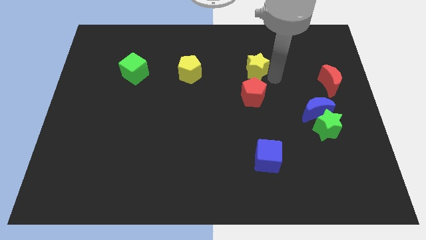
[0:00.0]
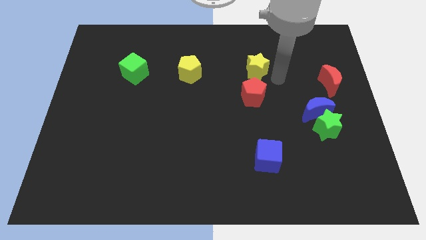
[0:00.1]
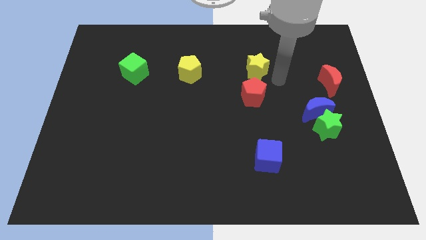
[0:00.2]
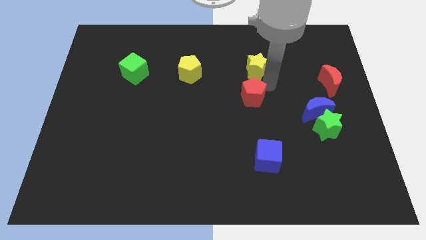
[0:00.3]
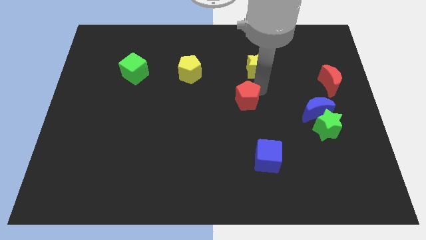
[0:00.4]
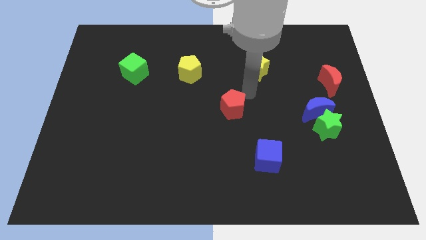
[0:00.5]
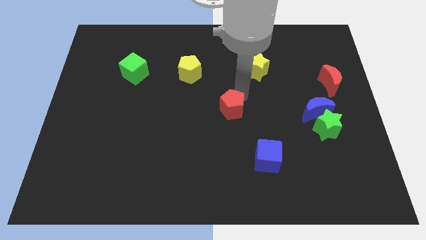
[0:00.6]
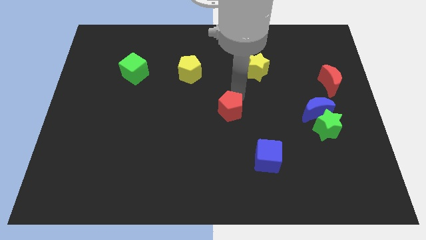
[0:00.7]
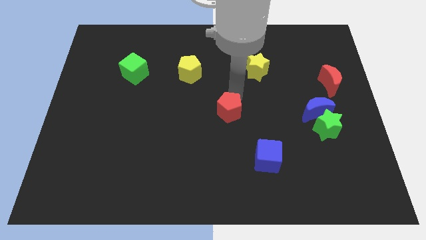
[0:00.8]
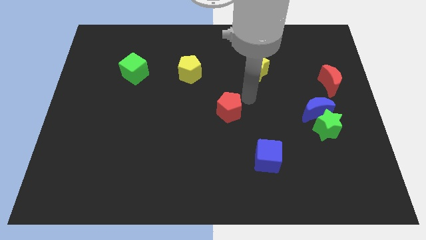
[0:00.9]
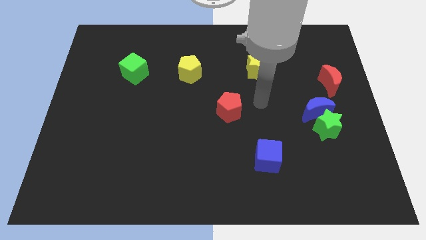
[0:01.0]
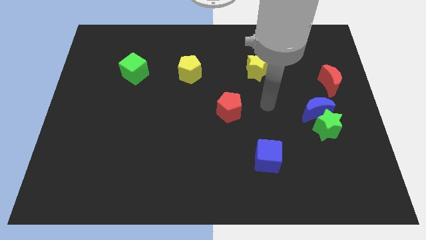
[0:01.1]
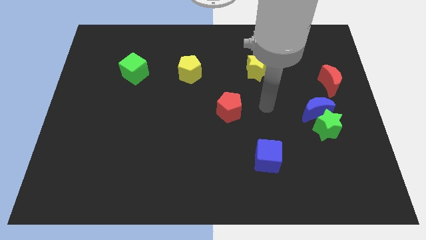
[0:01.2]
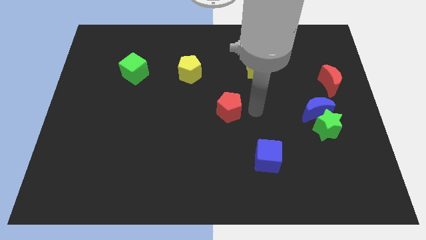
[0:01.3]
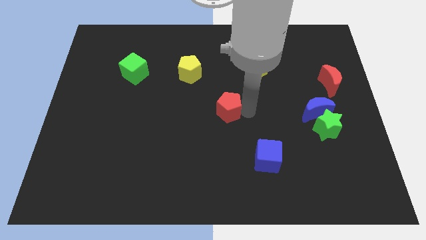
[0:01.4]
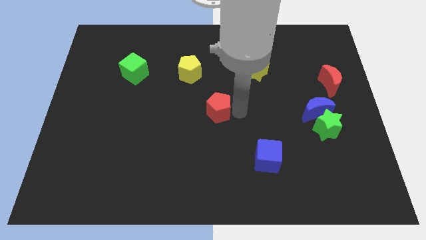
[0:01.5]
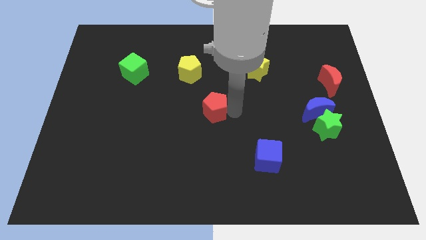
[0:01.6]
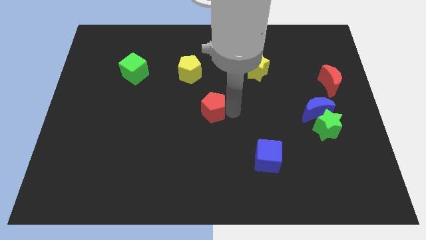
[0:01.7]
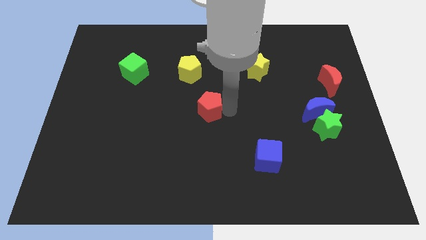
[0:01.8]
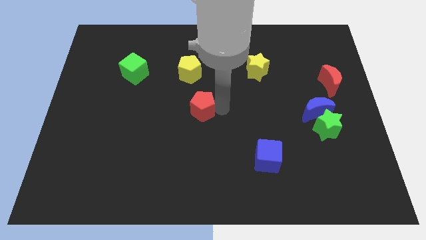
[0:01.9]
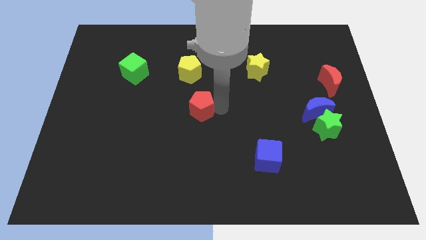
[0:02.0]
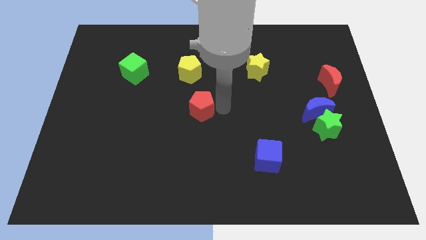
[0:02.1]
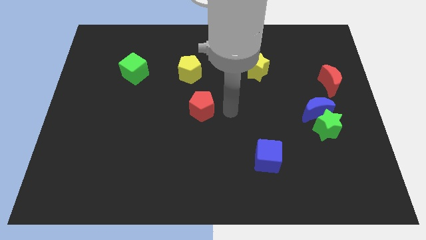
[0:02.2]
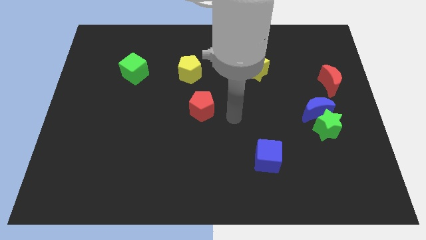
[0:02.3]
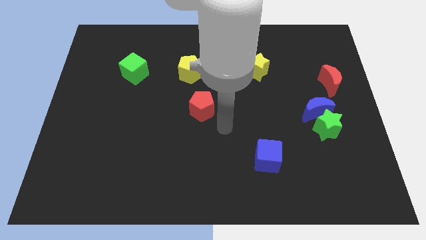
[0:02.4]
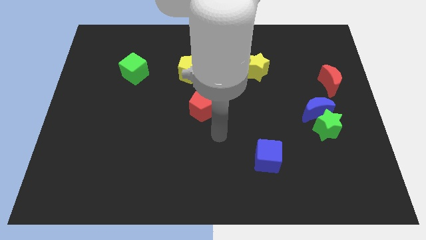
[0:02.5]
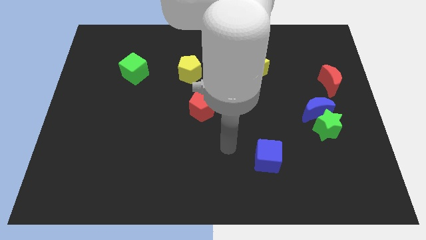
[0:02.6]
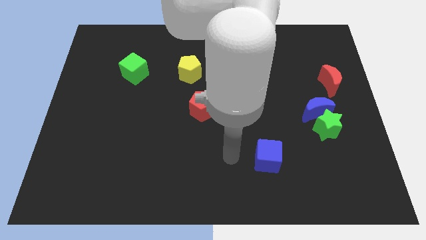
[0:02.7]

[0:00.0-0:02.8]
move the red pentagon to the center

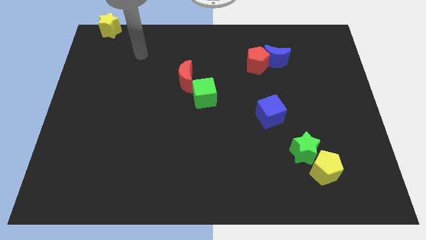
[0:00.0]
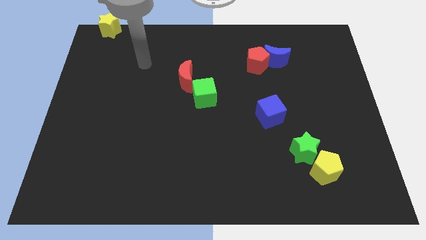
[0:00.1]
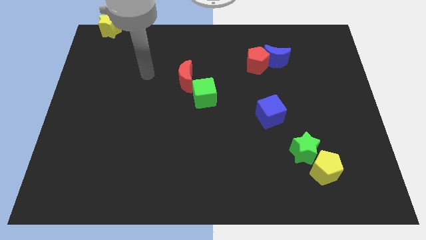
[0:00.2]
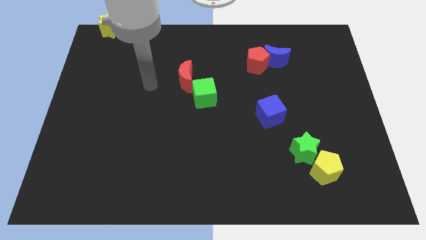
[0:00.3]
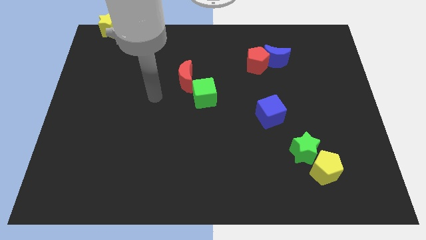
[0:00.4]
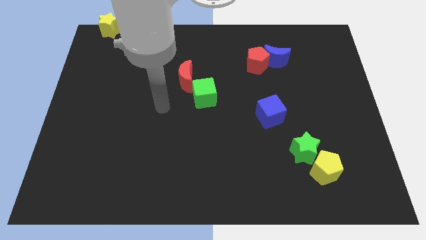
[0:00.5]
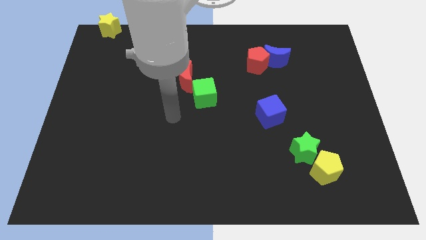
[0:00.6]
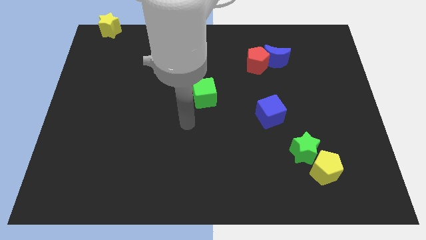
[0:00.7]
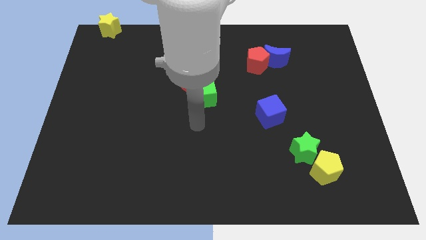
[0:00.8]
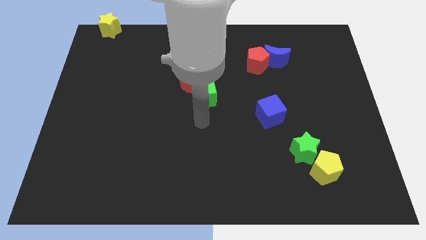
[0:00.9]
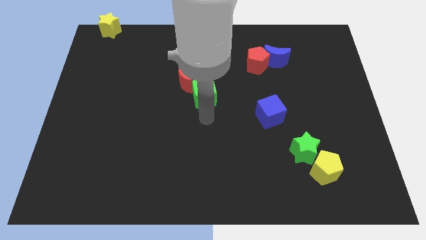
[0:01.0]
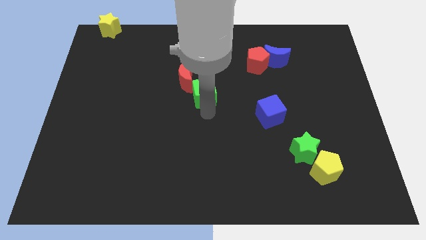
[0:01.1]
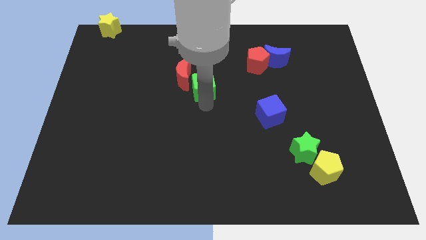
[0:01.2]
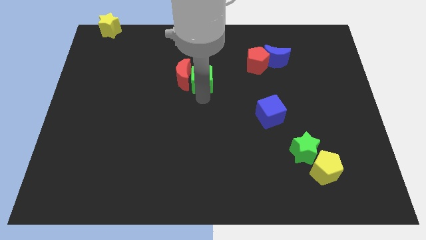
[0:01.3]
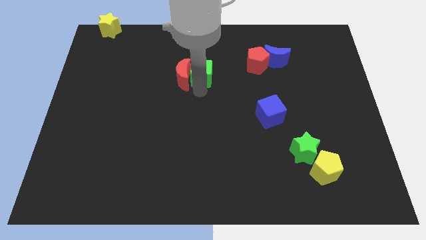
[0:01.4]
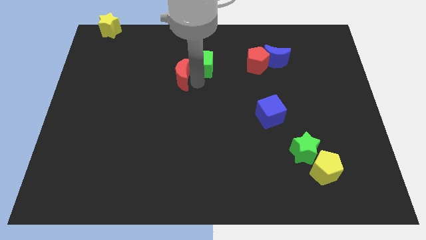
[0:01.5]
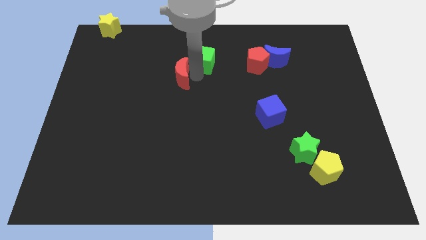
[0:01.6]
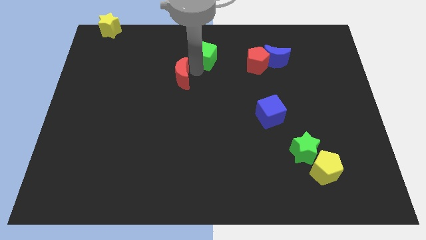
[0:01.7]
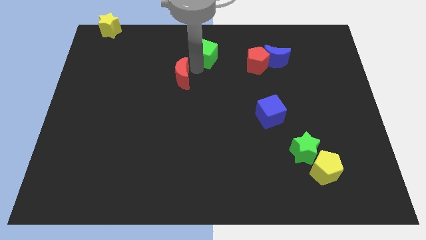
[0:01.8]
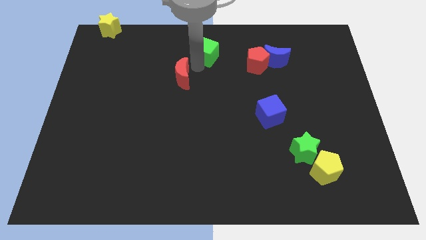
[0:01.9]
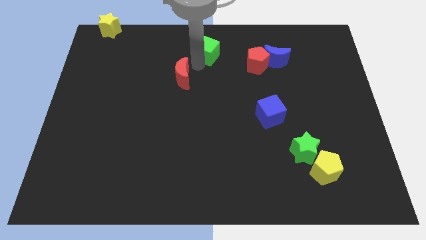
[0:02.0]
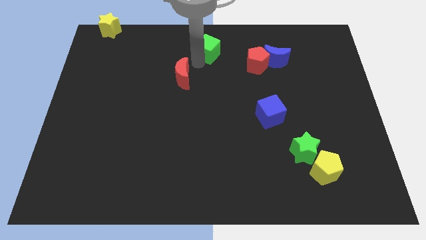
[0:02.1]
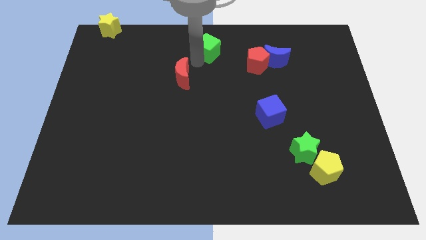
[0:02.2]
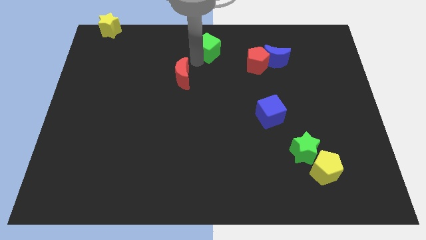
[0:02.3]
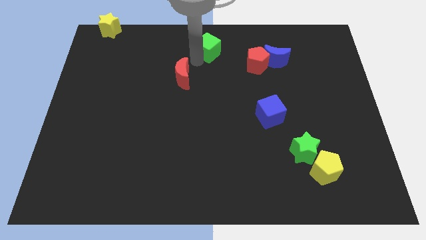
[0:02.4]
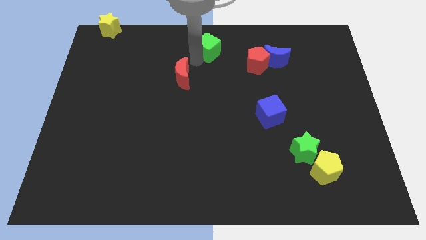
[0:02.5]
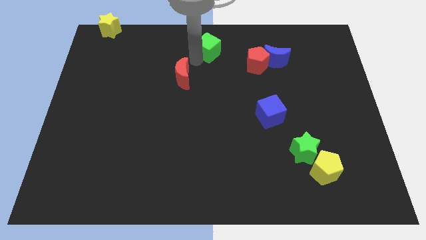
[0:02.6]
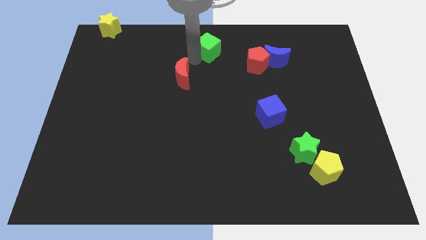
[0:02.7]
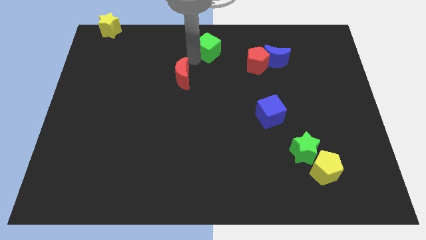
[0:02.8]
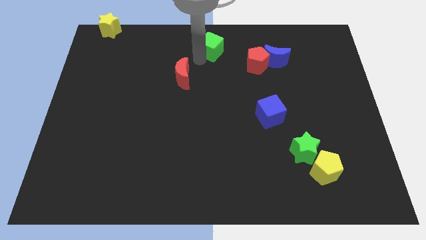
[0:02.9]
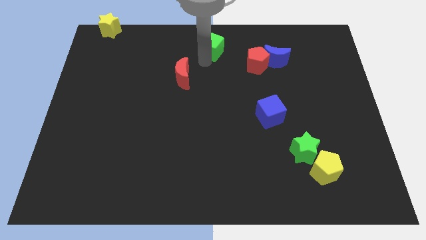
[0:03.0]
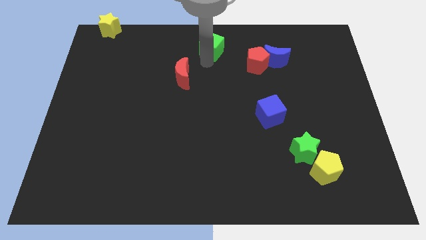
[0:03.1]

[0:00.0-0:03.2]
separate the green cube from the red crescent

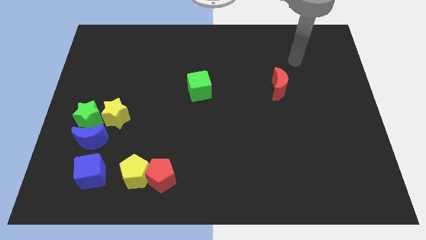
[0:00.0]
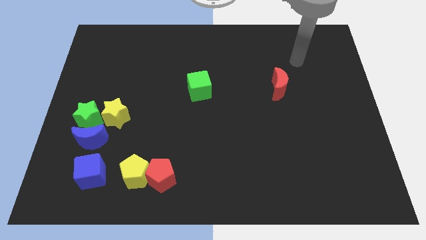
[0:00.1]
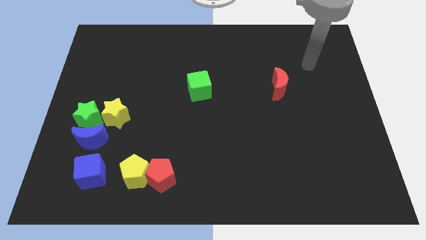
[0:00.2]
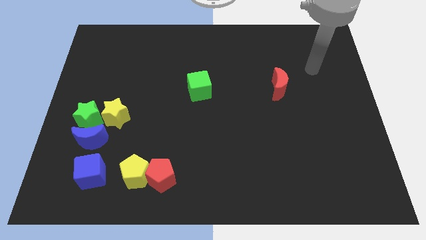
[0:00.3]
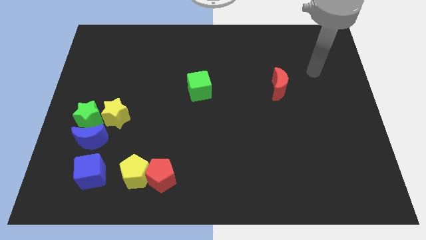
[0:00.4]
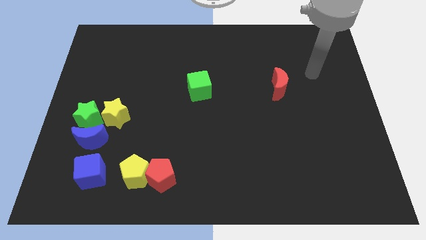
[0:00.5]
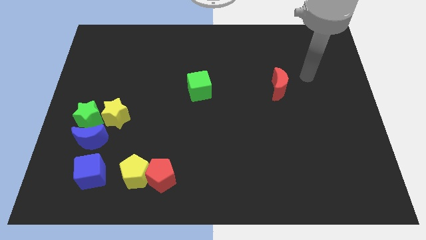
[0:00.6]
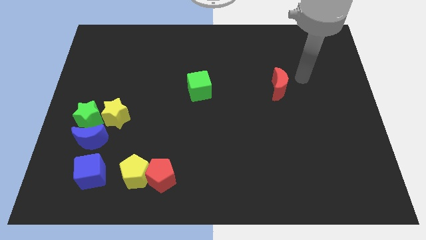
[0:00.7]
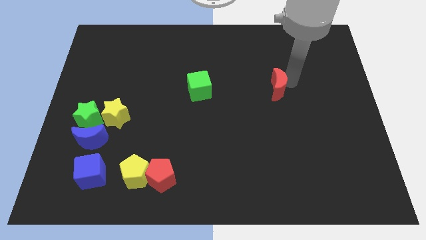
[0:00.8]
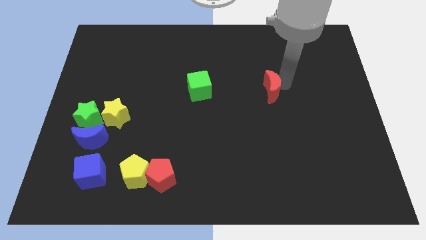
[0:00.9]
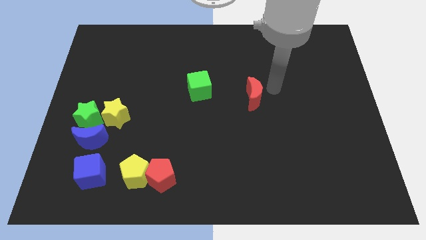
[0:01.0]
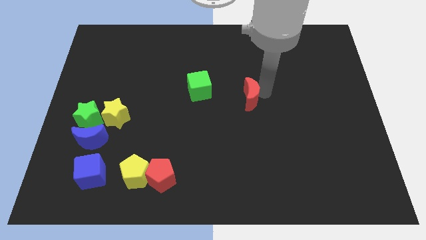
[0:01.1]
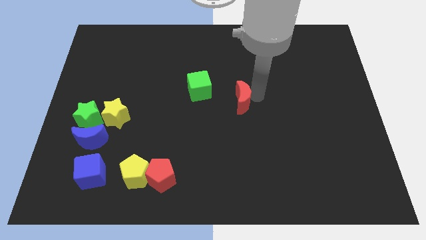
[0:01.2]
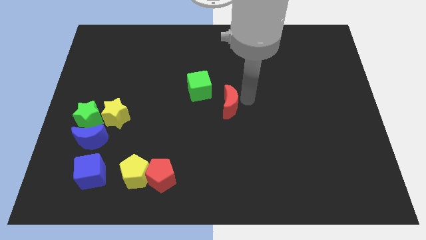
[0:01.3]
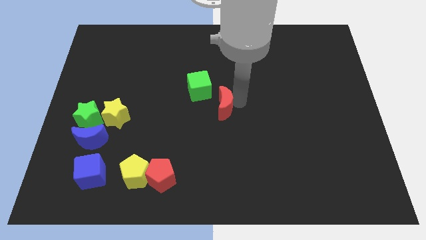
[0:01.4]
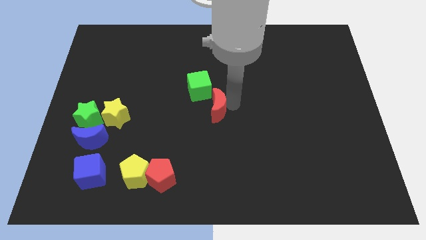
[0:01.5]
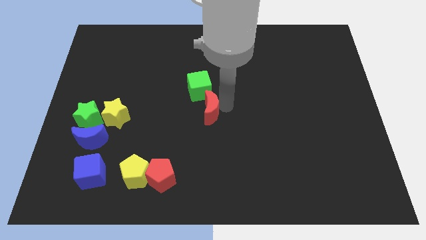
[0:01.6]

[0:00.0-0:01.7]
slide the red moon to the center of the board

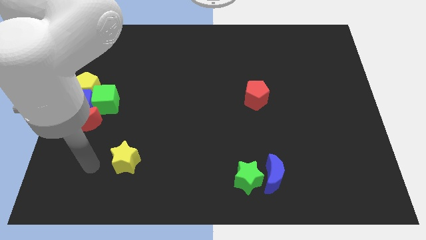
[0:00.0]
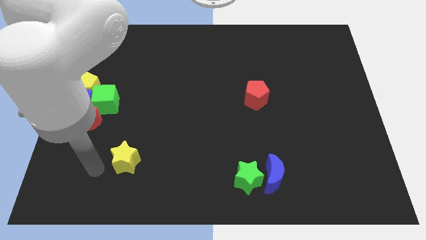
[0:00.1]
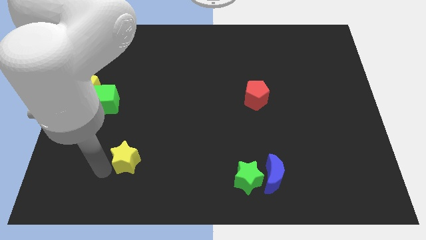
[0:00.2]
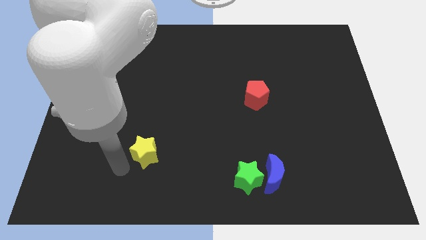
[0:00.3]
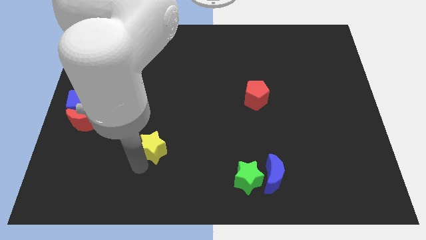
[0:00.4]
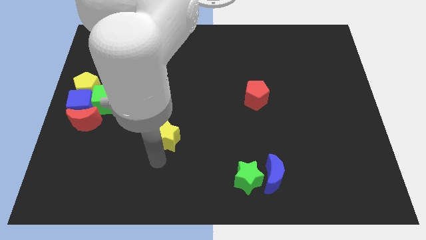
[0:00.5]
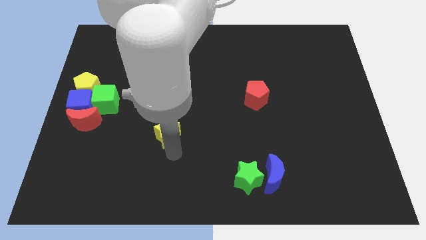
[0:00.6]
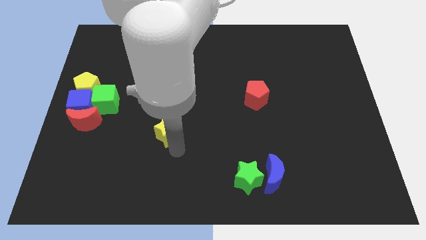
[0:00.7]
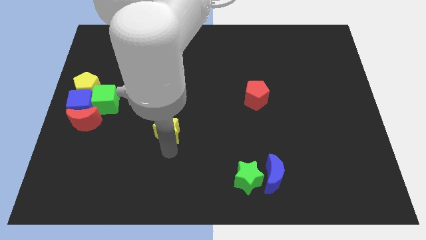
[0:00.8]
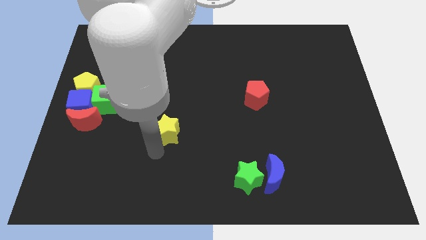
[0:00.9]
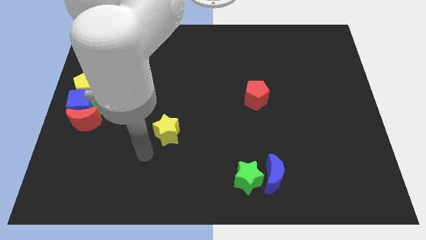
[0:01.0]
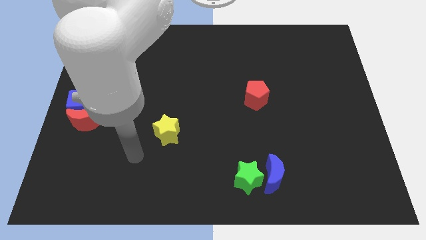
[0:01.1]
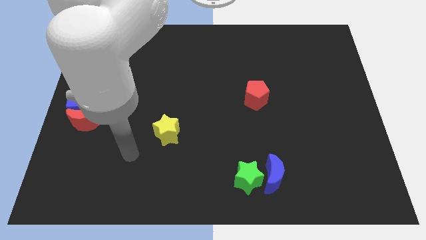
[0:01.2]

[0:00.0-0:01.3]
put the yellow star diagonal to the green star
